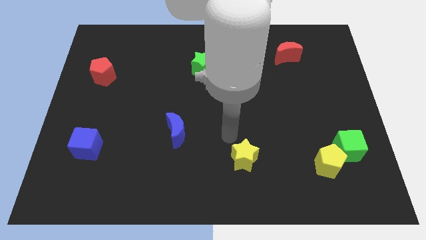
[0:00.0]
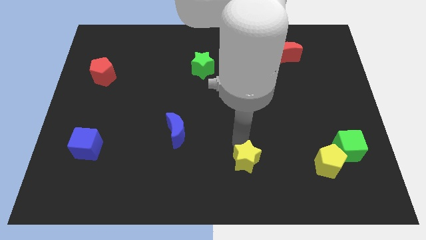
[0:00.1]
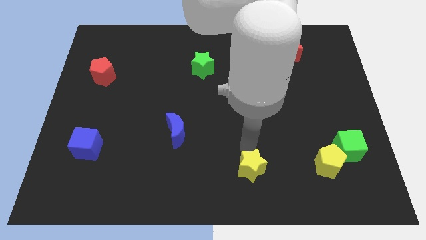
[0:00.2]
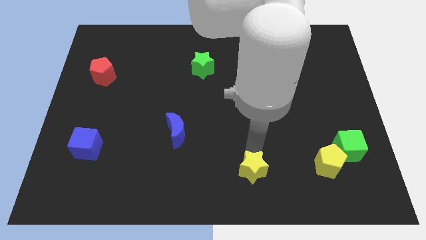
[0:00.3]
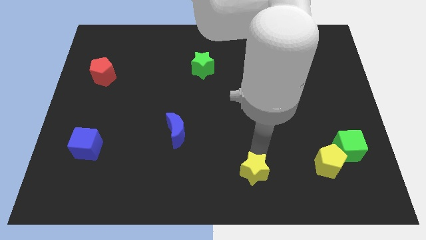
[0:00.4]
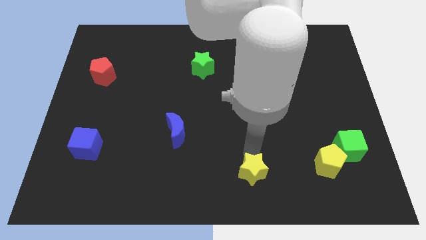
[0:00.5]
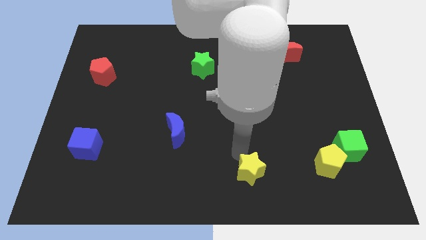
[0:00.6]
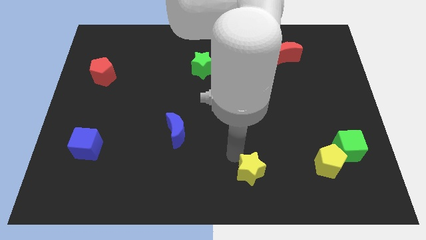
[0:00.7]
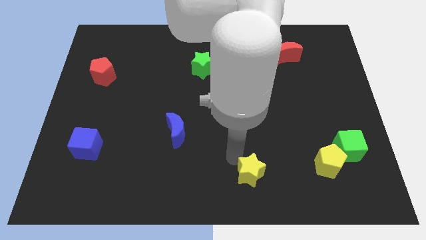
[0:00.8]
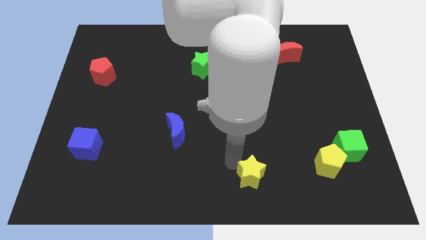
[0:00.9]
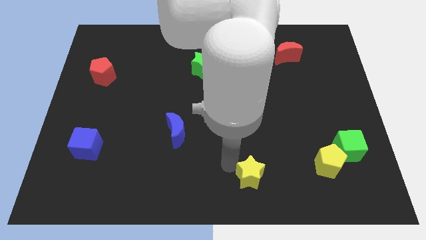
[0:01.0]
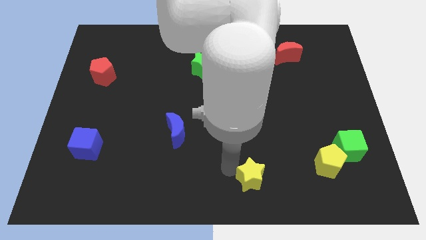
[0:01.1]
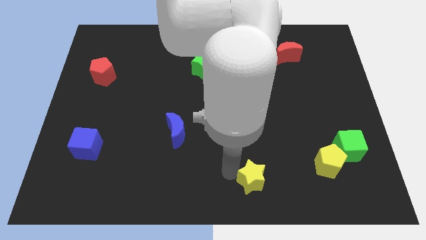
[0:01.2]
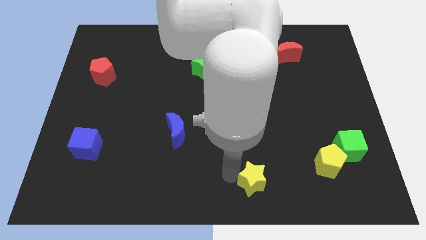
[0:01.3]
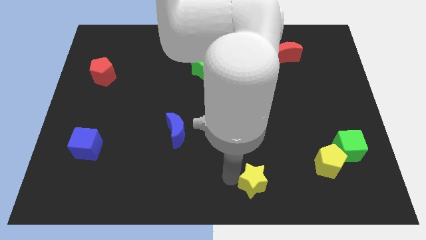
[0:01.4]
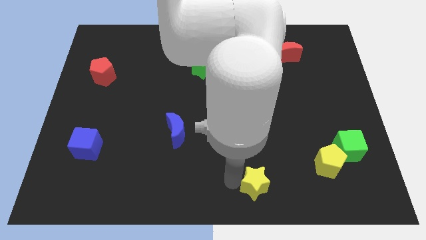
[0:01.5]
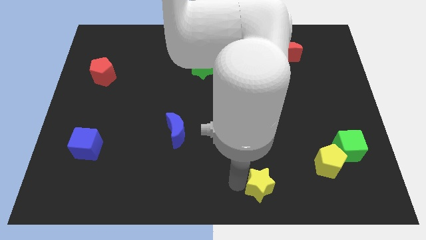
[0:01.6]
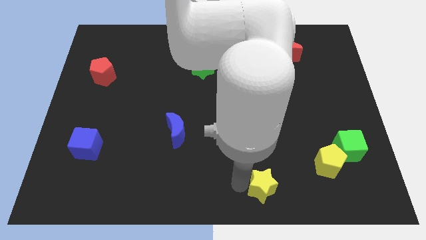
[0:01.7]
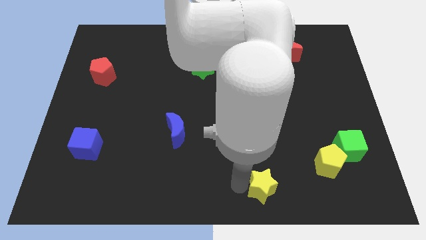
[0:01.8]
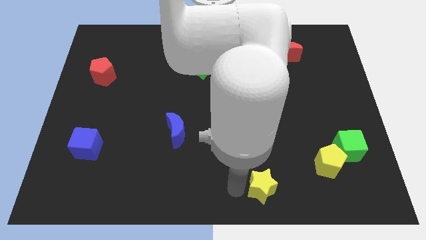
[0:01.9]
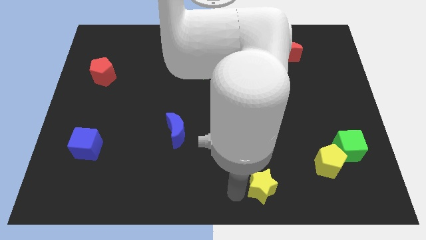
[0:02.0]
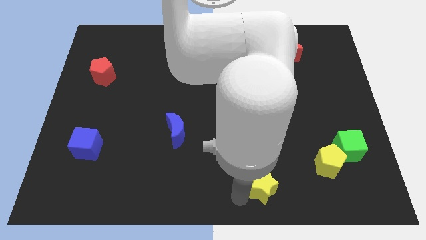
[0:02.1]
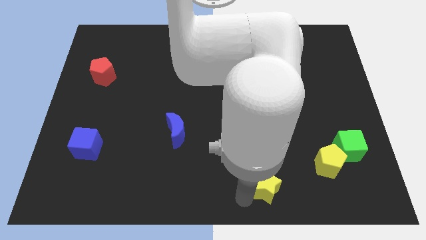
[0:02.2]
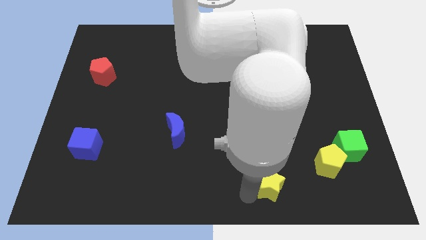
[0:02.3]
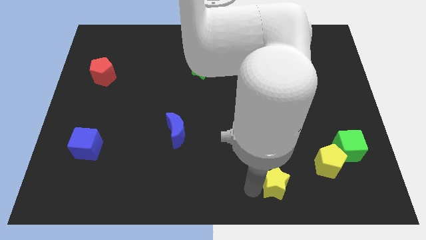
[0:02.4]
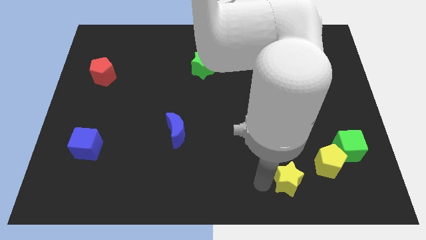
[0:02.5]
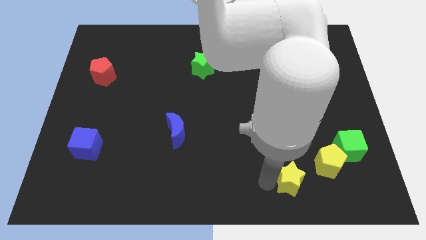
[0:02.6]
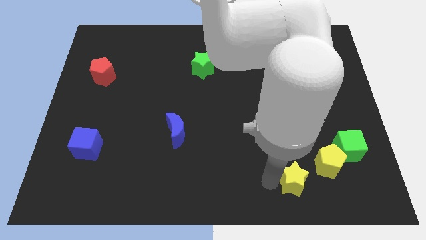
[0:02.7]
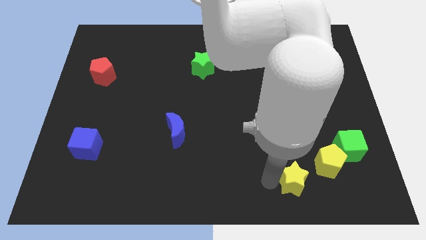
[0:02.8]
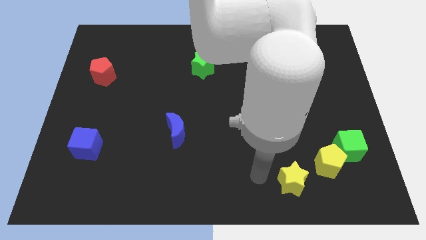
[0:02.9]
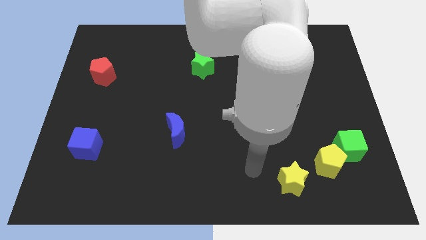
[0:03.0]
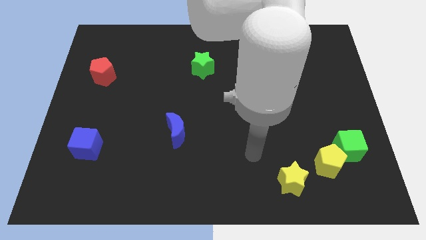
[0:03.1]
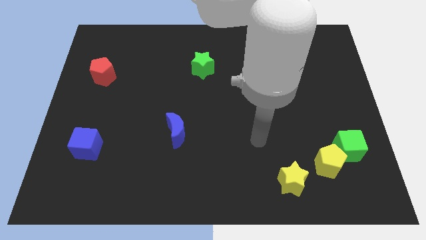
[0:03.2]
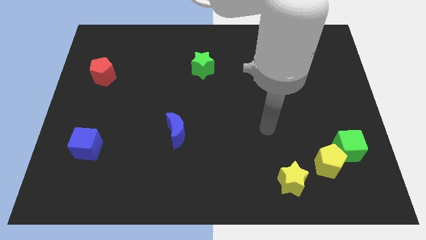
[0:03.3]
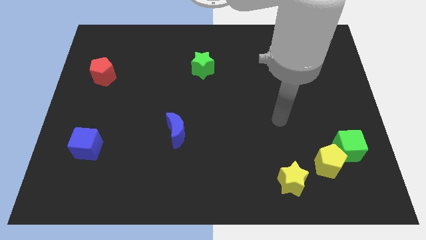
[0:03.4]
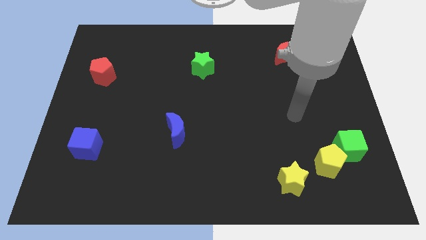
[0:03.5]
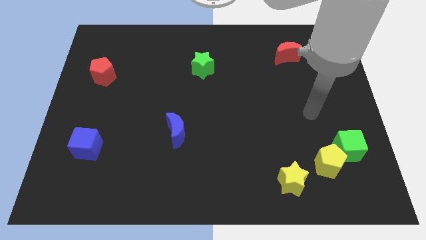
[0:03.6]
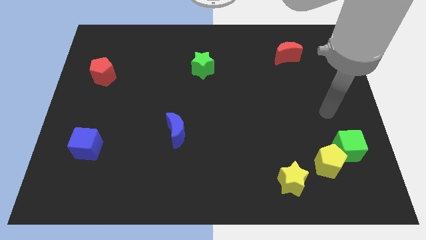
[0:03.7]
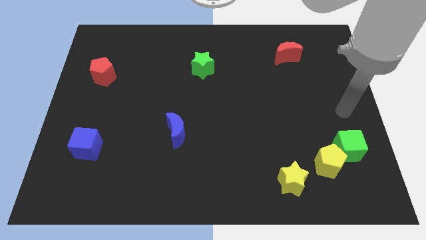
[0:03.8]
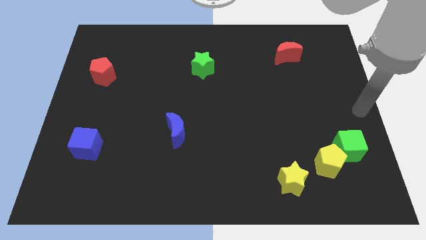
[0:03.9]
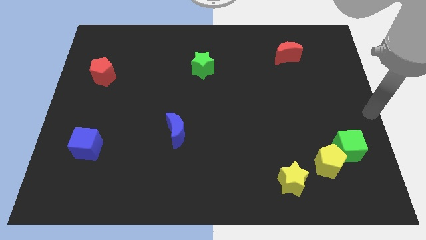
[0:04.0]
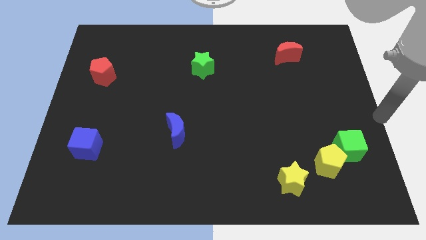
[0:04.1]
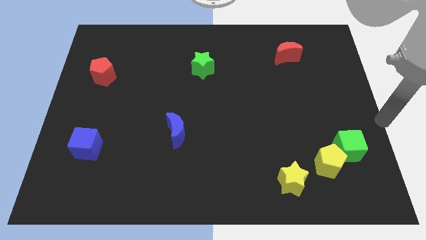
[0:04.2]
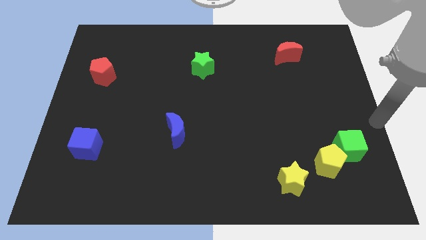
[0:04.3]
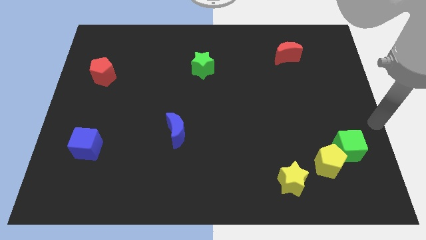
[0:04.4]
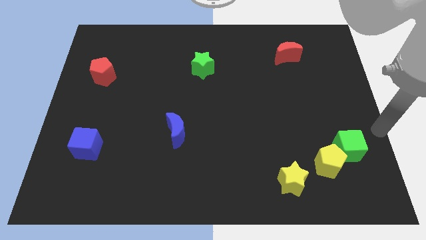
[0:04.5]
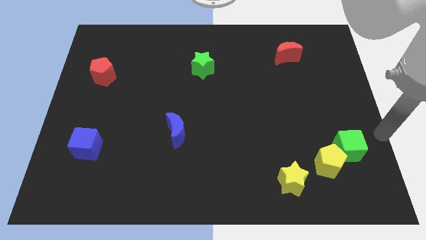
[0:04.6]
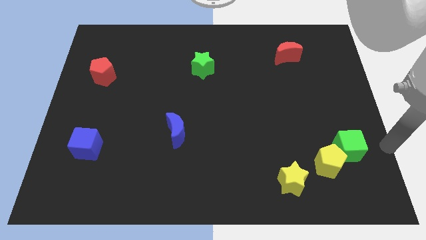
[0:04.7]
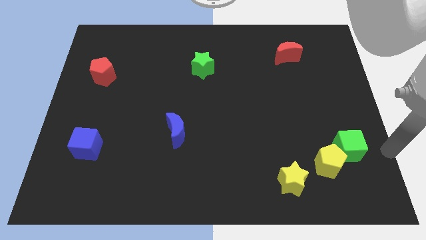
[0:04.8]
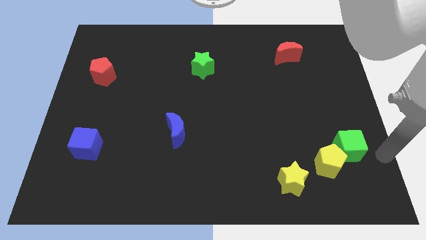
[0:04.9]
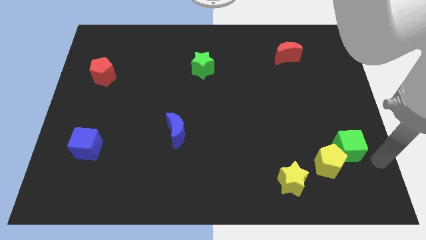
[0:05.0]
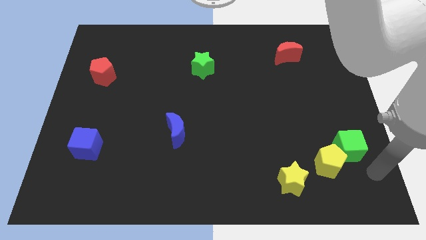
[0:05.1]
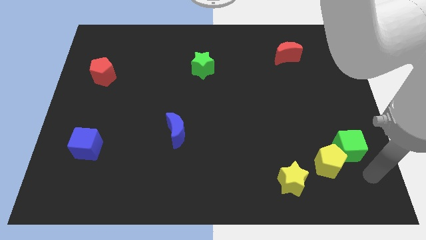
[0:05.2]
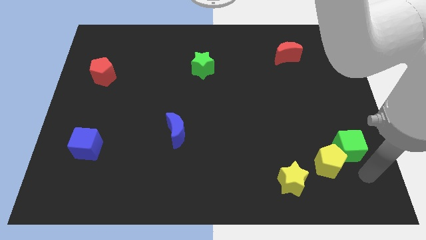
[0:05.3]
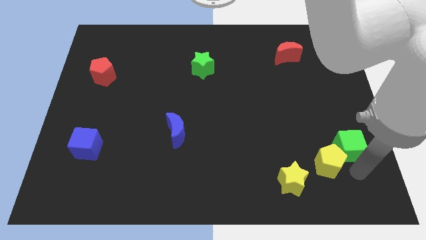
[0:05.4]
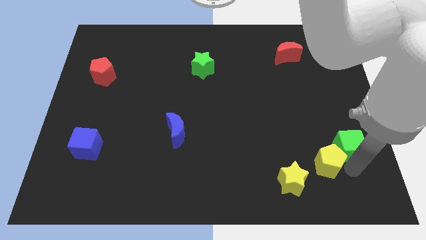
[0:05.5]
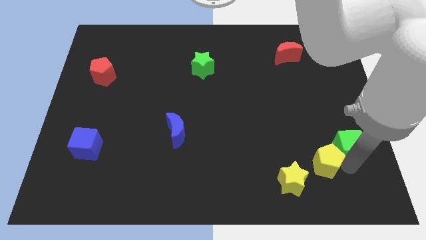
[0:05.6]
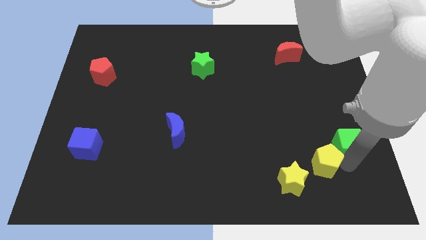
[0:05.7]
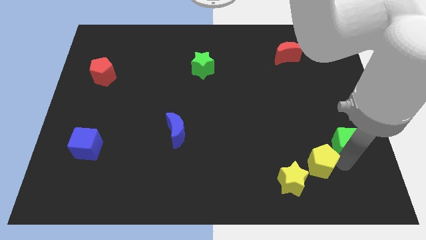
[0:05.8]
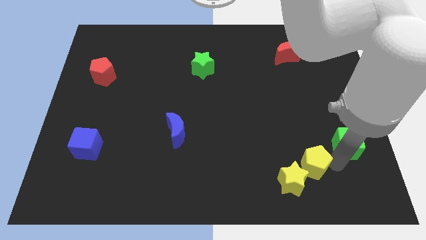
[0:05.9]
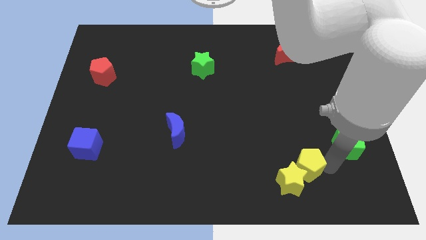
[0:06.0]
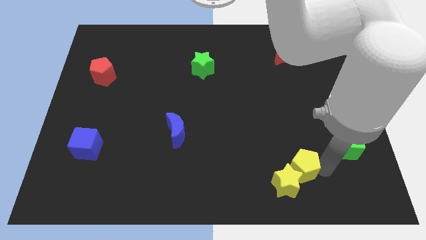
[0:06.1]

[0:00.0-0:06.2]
group up the yellow blocks at the bottom side of the table

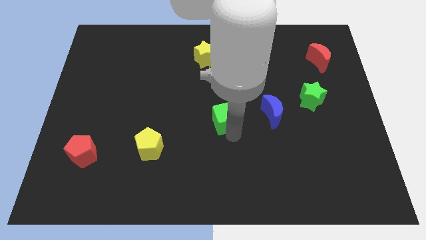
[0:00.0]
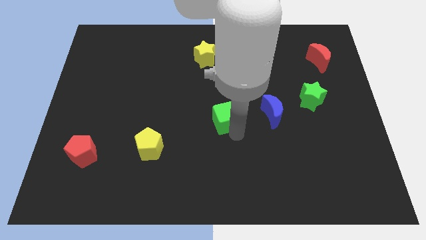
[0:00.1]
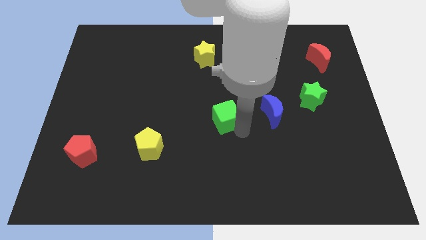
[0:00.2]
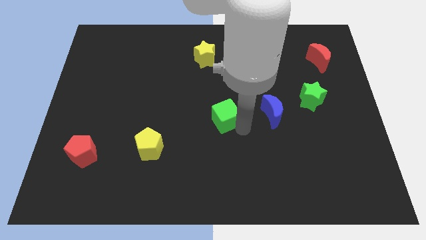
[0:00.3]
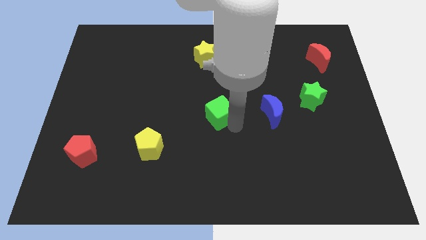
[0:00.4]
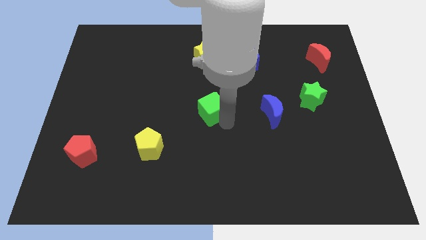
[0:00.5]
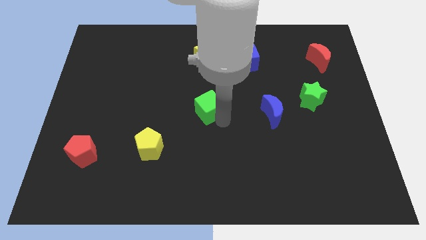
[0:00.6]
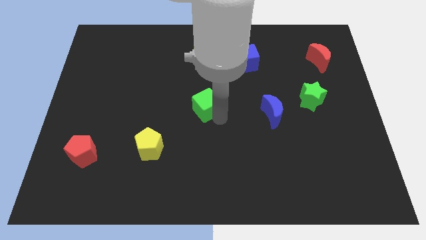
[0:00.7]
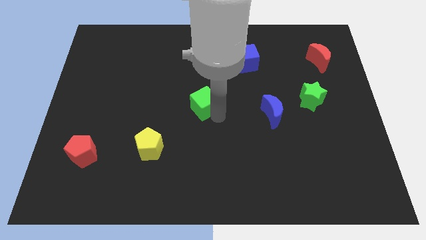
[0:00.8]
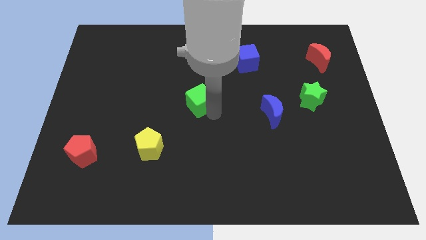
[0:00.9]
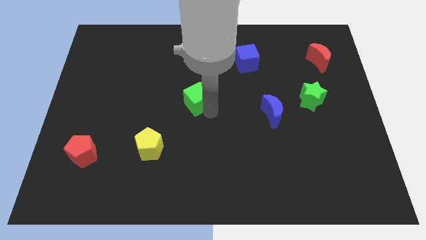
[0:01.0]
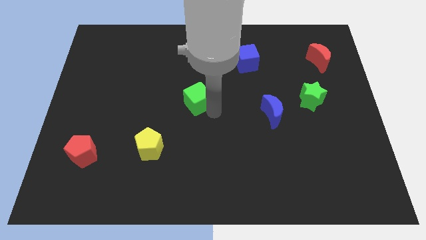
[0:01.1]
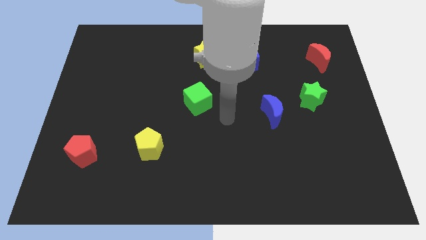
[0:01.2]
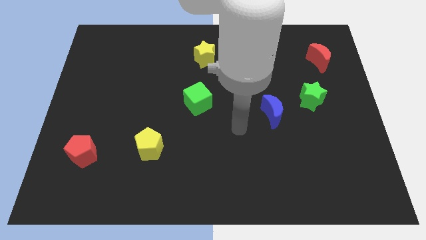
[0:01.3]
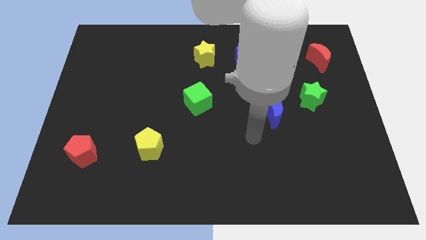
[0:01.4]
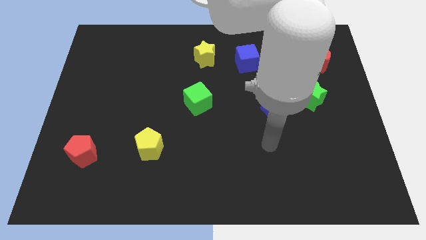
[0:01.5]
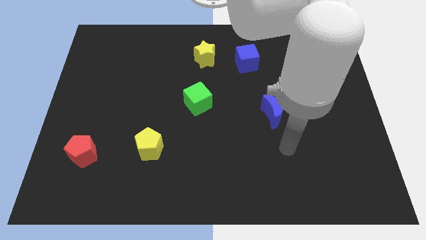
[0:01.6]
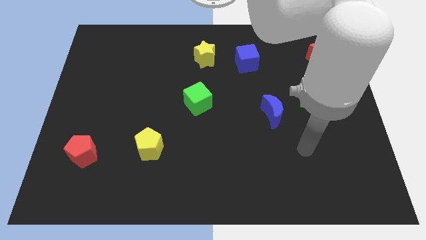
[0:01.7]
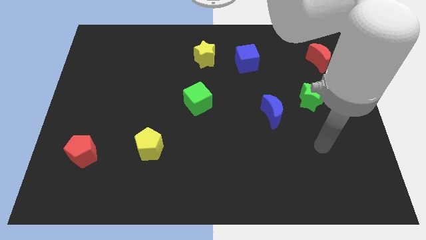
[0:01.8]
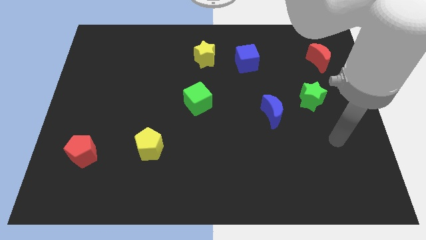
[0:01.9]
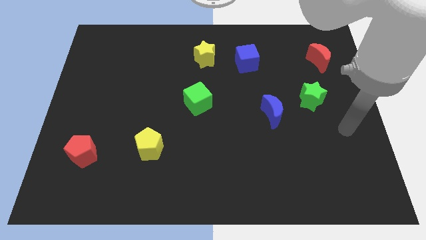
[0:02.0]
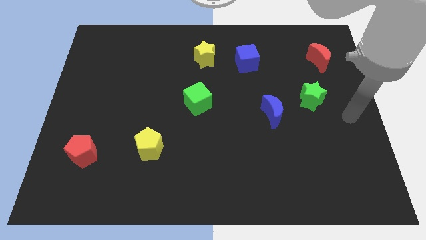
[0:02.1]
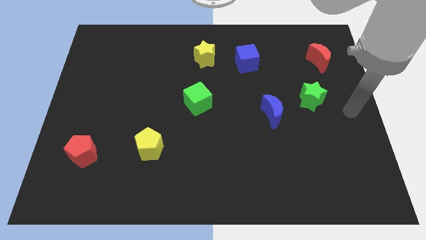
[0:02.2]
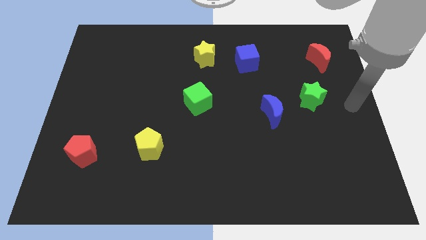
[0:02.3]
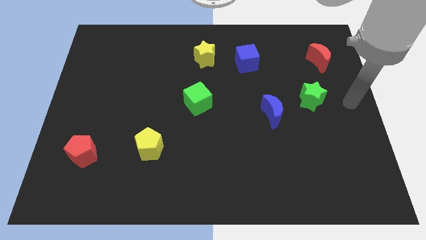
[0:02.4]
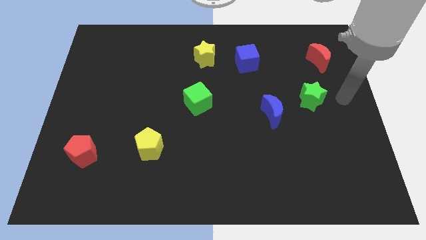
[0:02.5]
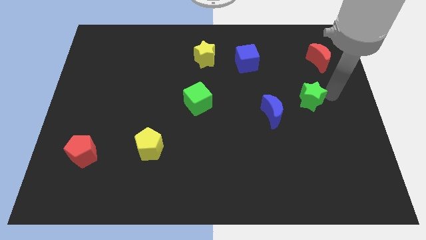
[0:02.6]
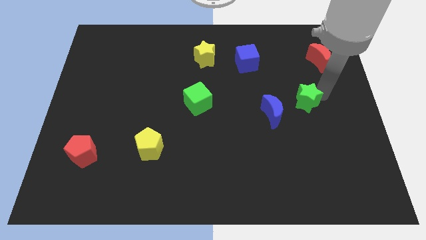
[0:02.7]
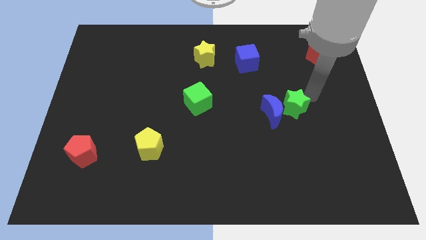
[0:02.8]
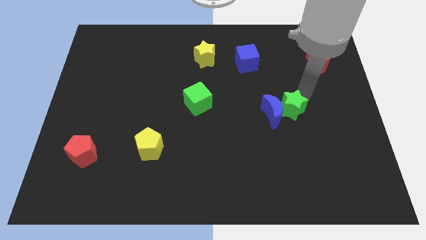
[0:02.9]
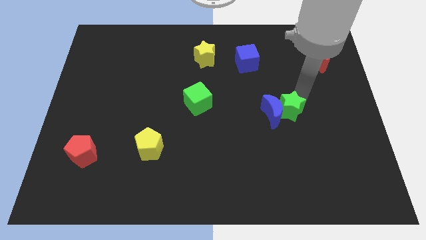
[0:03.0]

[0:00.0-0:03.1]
move green star beside blue moon
